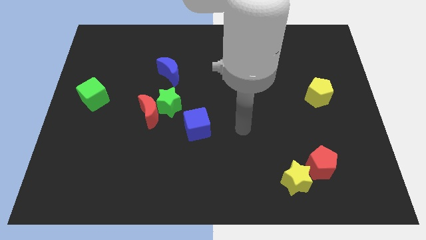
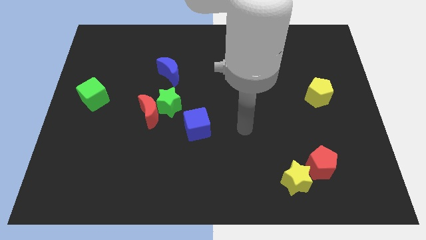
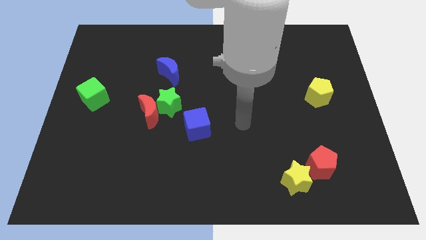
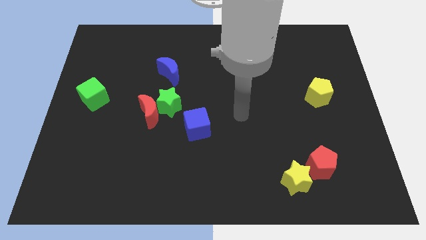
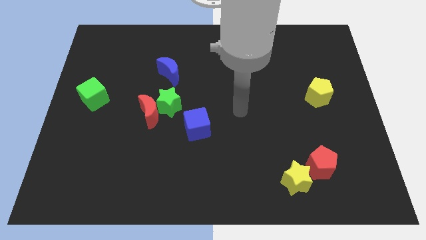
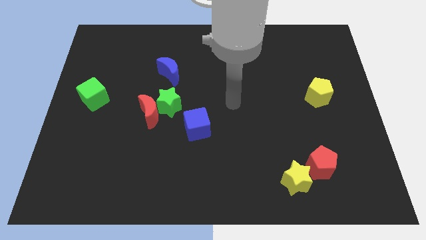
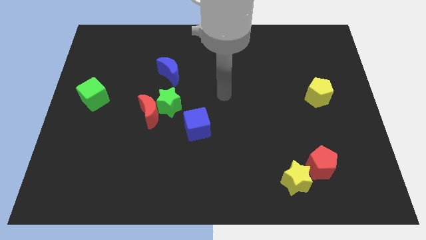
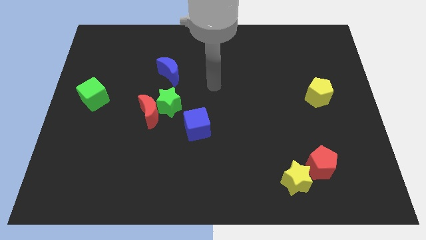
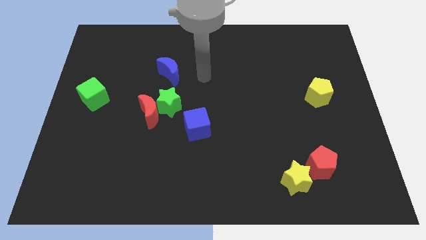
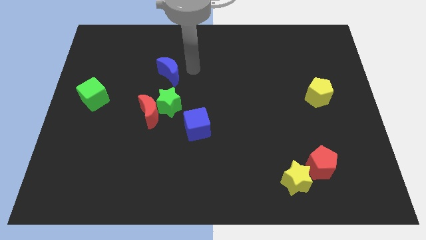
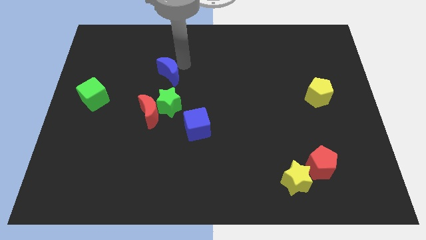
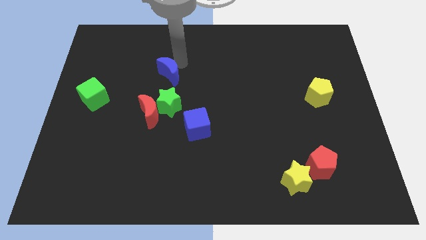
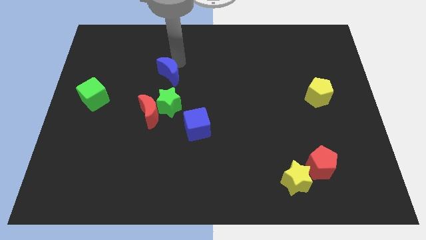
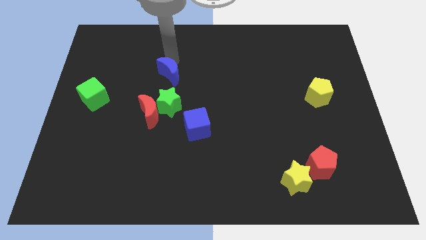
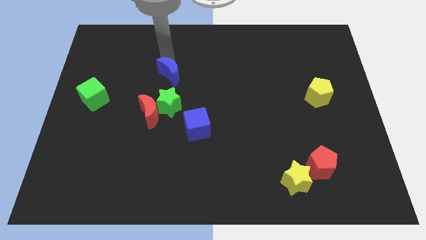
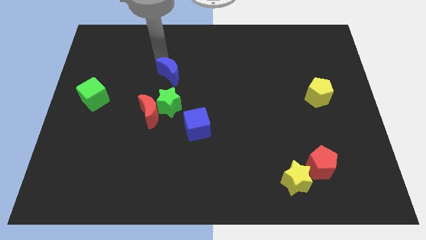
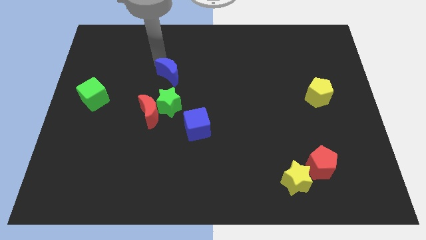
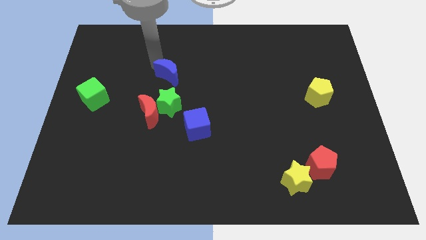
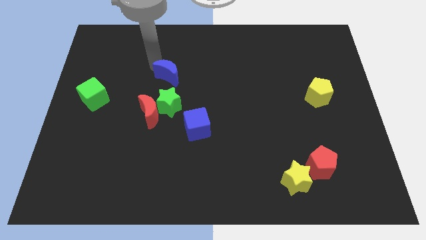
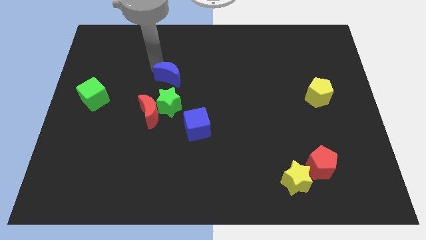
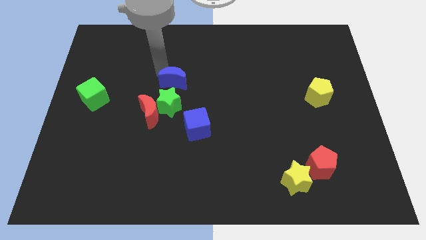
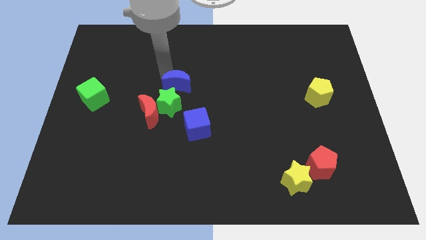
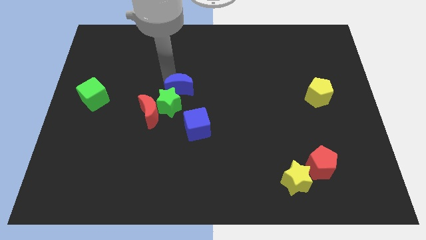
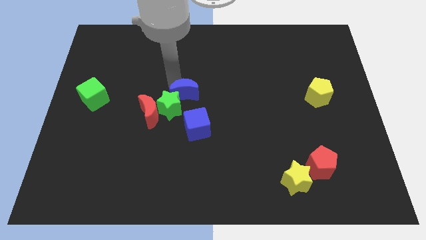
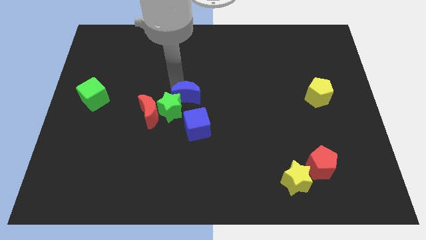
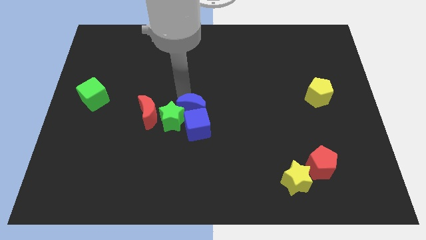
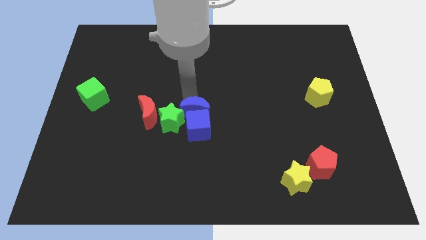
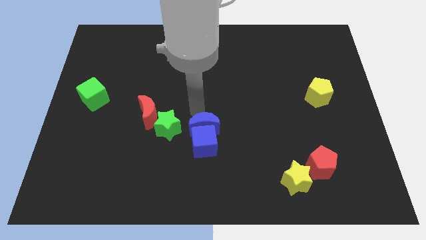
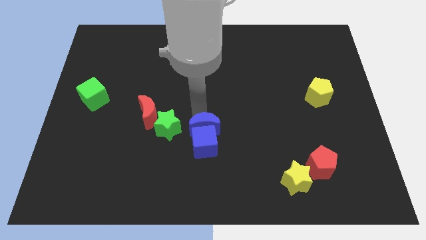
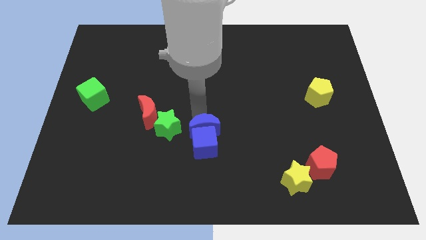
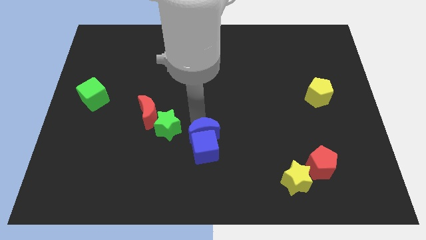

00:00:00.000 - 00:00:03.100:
push the blue moon into blue cube towards bottom

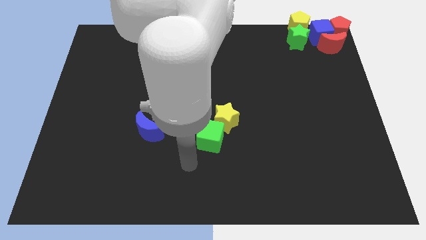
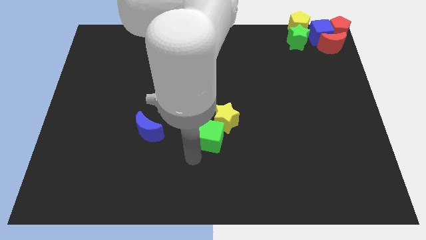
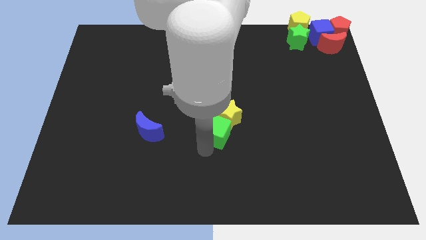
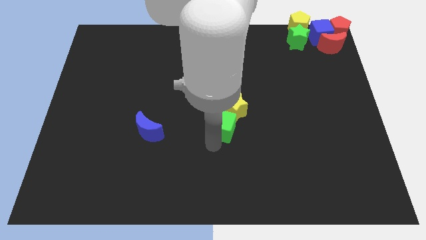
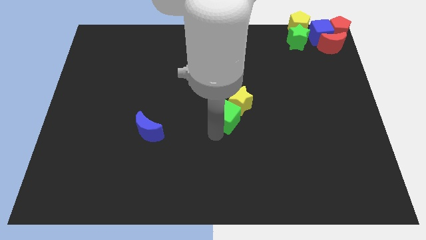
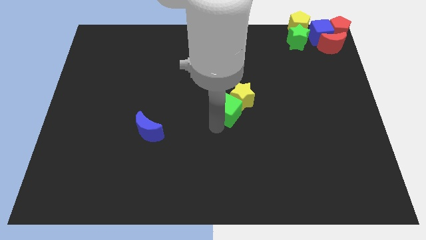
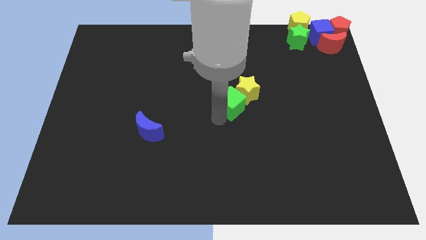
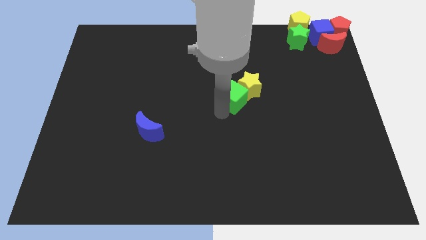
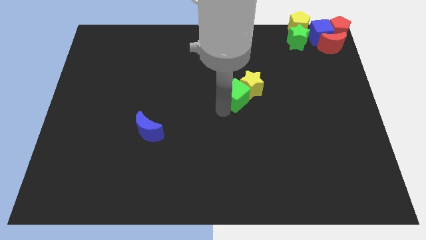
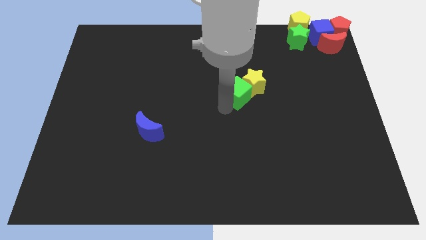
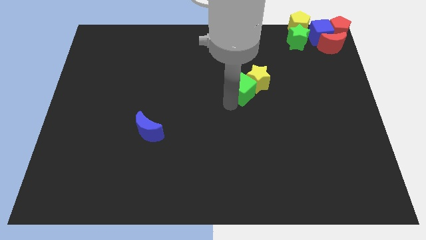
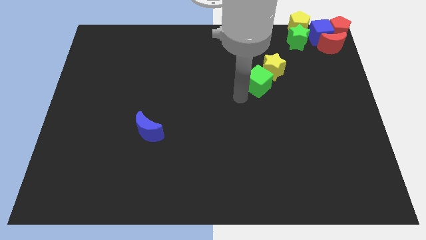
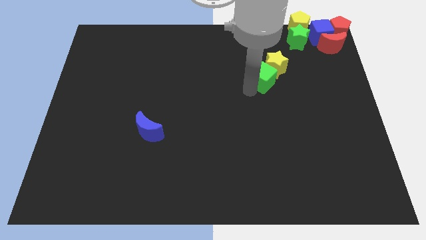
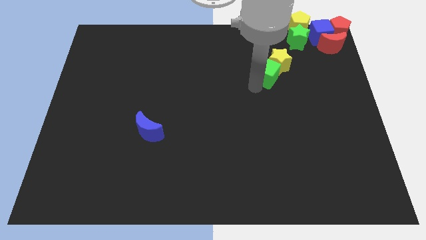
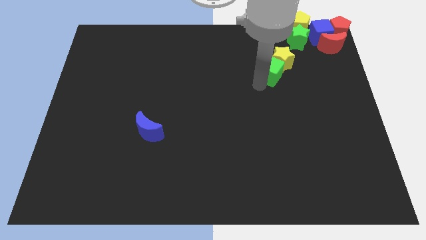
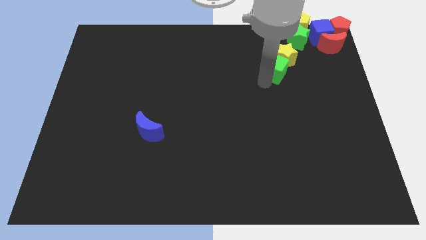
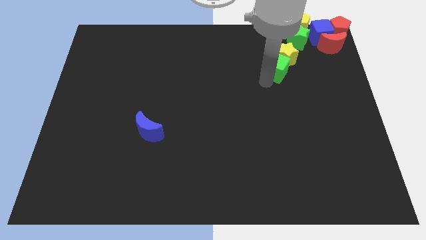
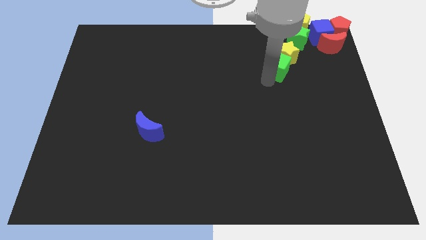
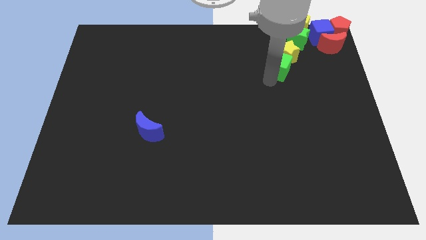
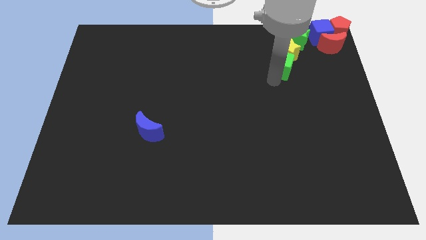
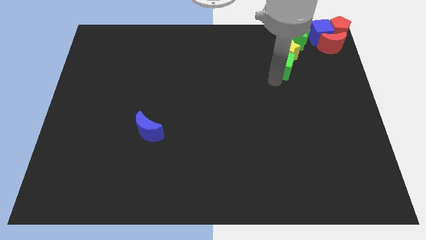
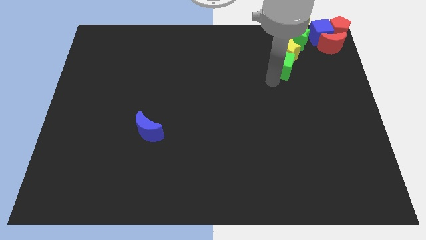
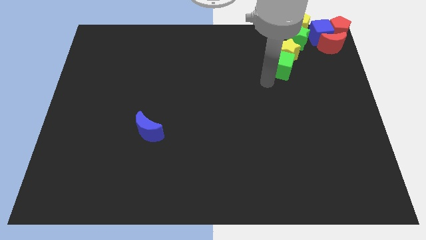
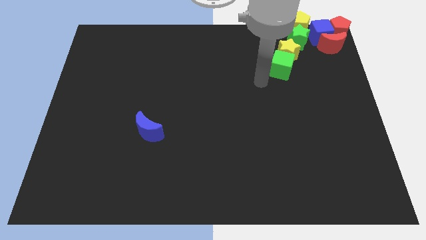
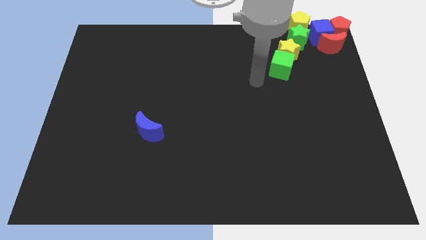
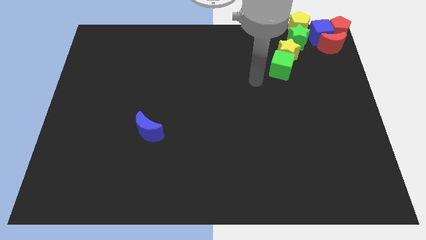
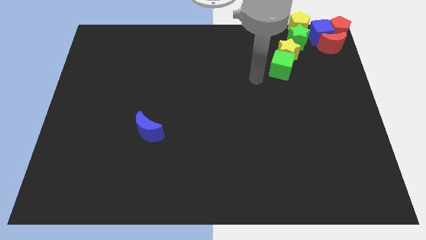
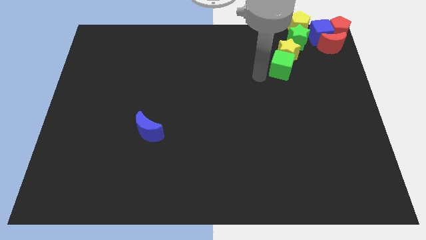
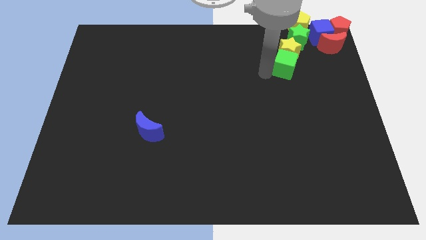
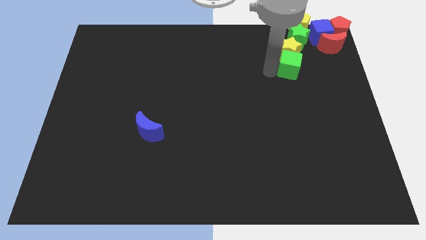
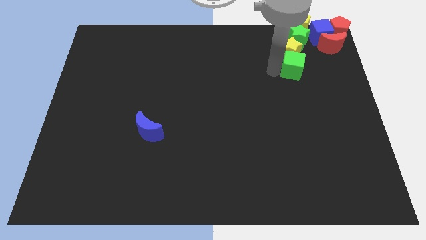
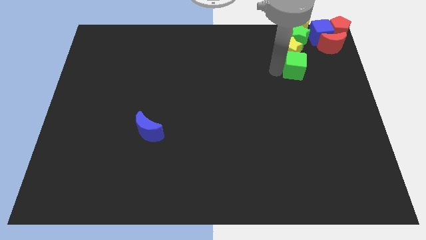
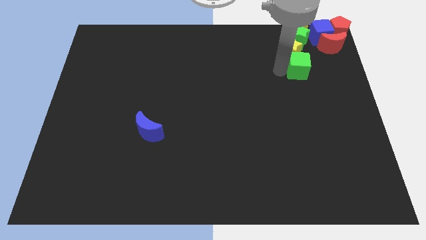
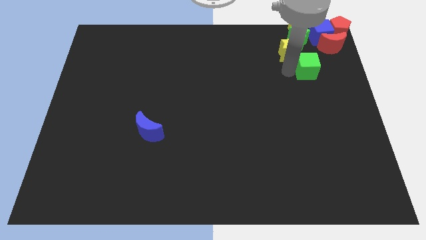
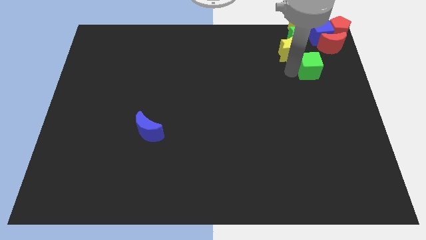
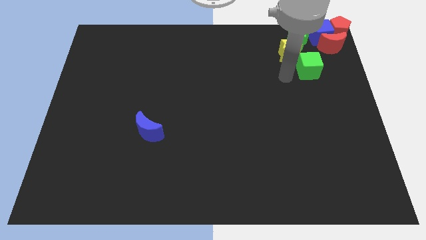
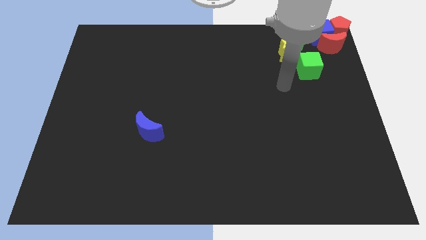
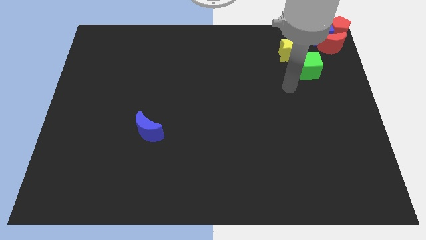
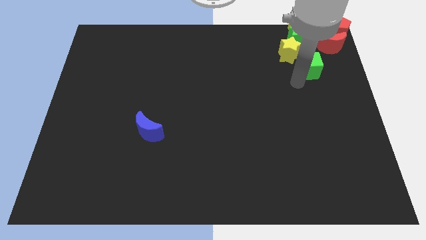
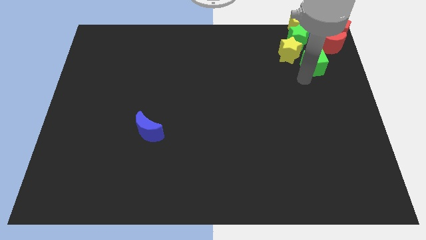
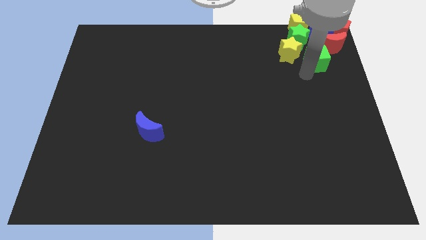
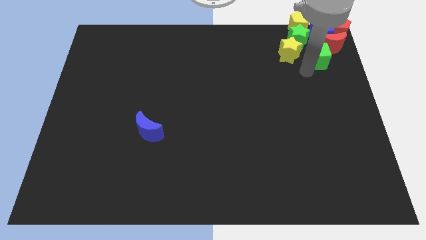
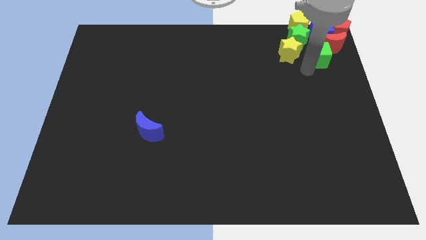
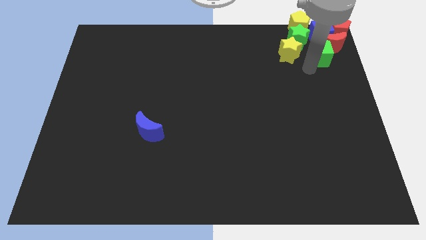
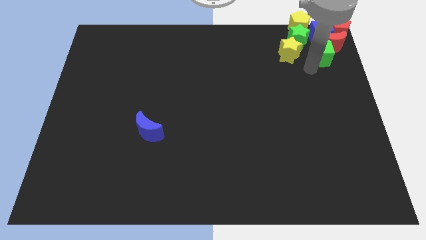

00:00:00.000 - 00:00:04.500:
place the green cube to the right of the yellow star

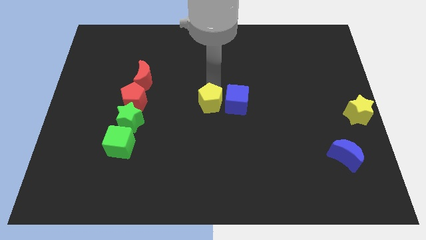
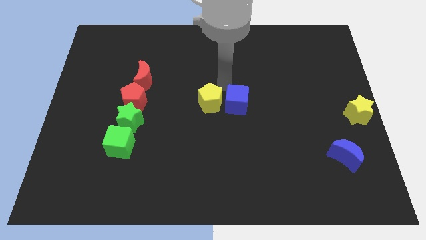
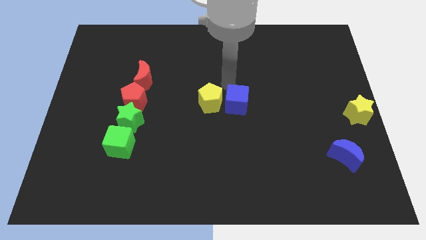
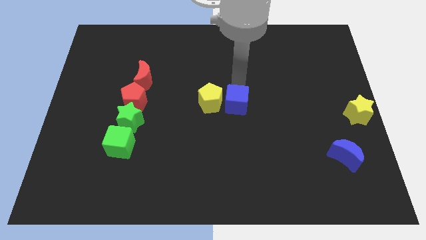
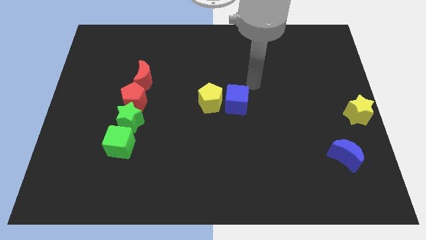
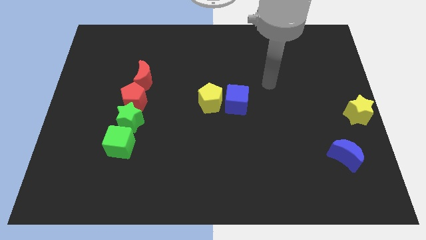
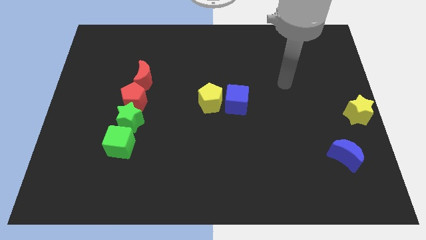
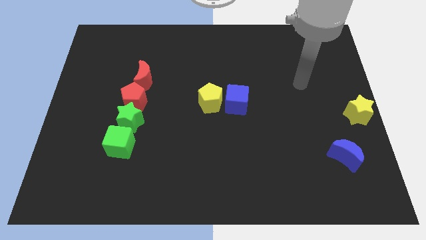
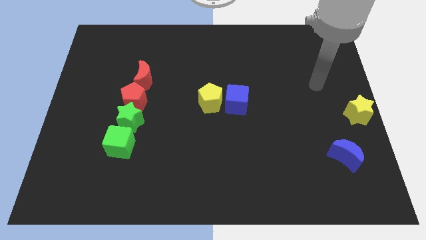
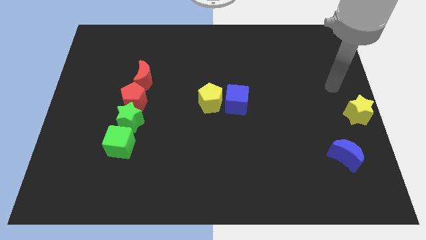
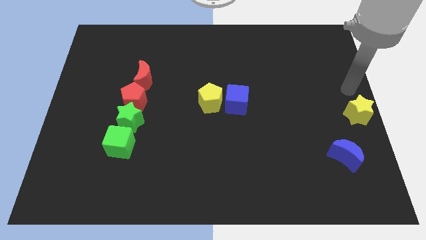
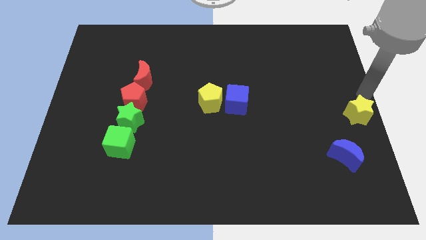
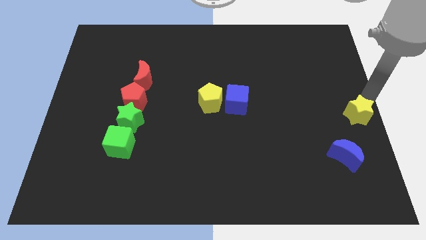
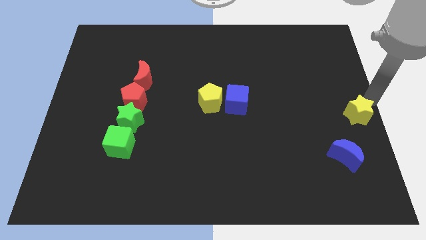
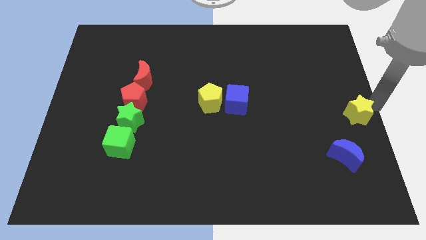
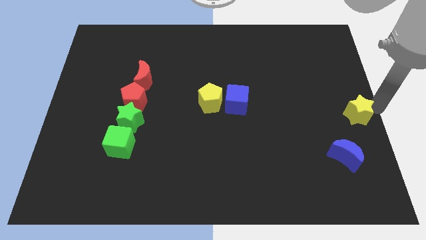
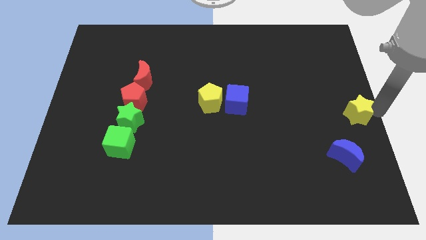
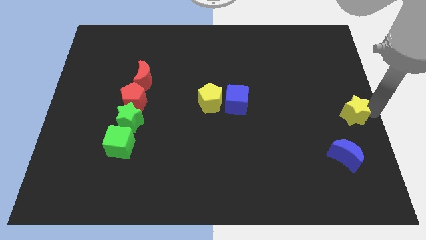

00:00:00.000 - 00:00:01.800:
move your arm to the right of the yellow star
